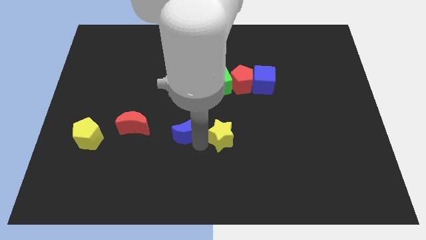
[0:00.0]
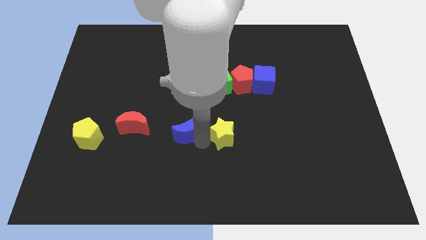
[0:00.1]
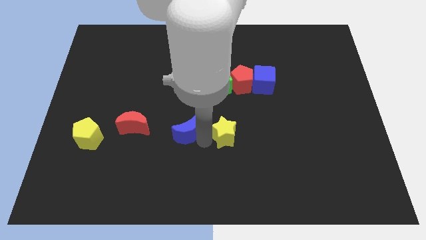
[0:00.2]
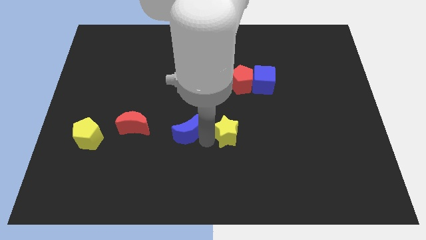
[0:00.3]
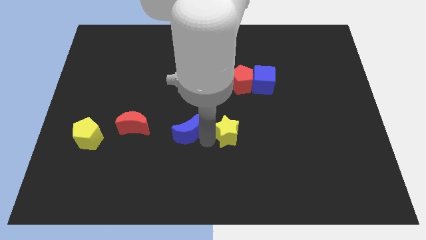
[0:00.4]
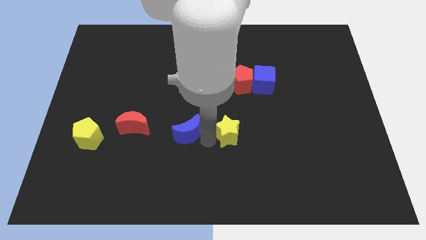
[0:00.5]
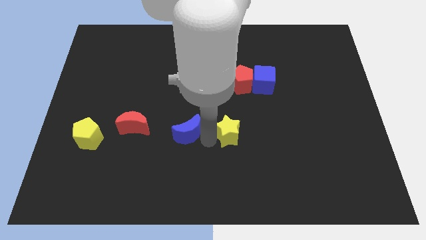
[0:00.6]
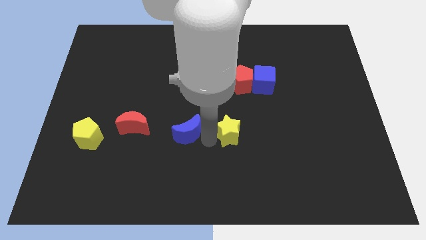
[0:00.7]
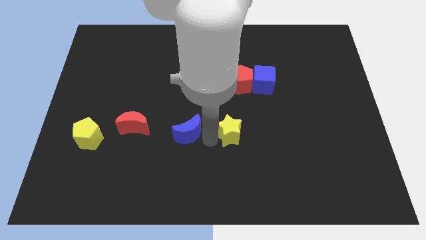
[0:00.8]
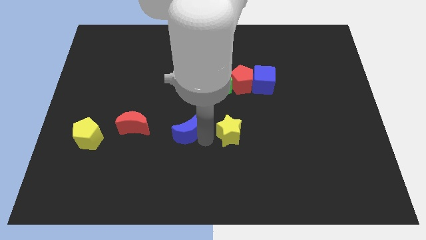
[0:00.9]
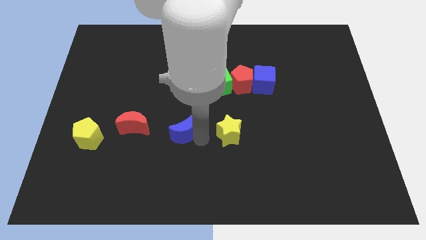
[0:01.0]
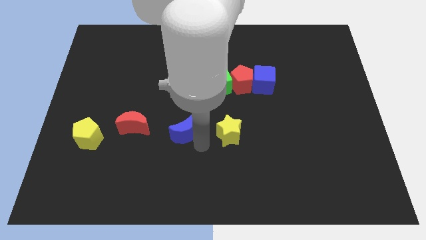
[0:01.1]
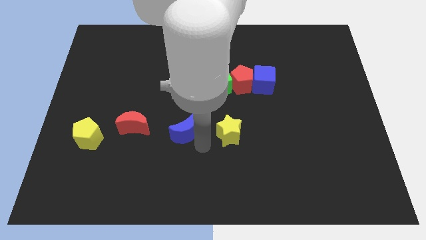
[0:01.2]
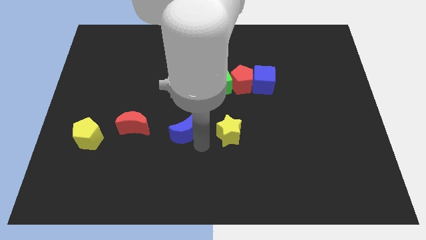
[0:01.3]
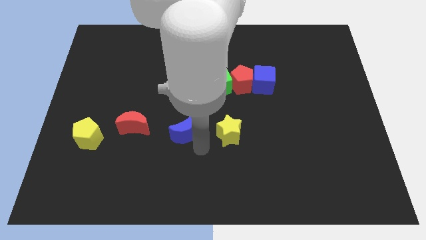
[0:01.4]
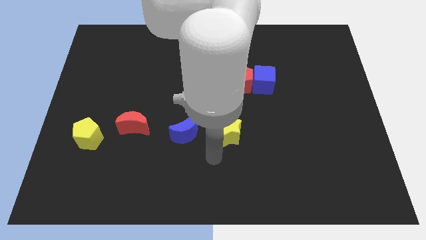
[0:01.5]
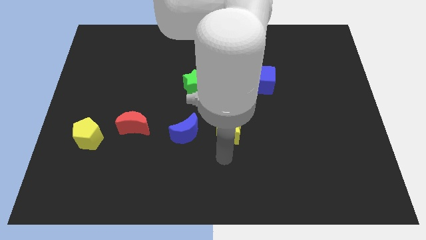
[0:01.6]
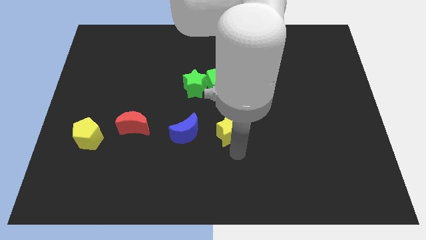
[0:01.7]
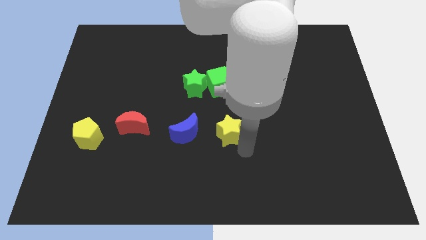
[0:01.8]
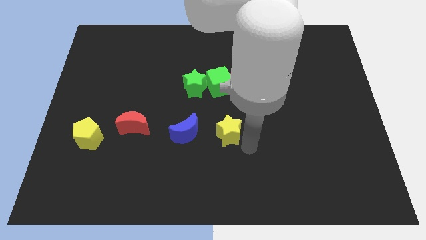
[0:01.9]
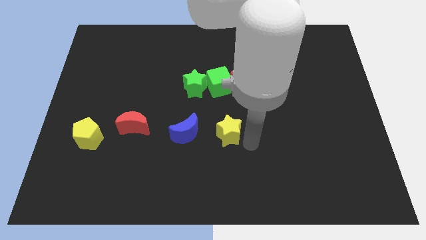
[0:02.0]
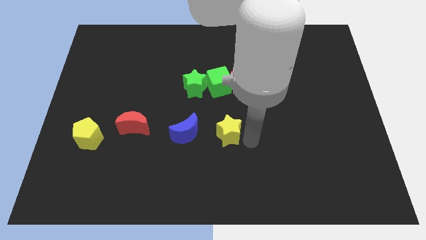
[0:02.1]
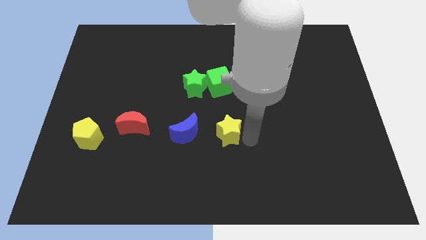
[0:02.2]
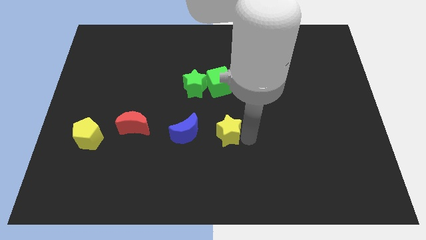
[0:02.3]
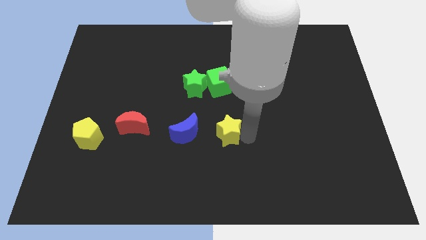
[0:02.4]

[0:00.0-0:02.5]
push yellow star into the blue crescent

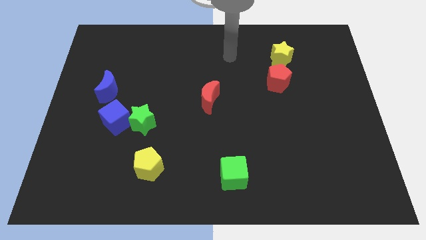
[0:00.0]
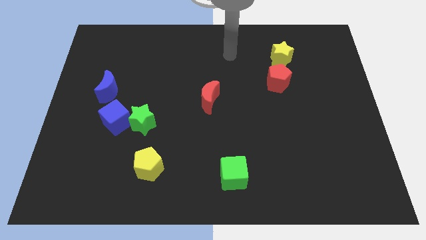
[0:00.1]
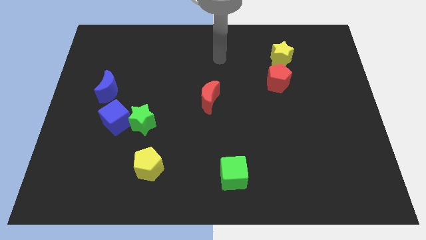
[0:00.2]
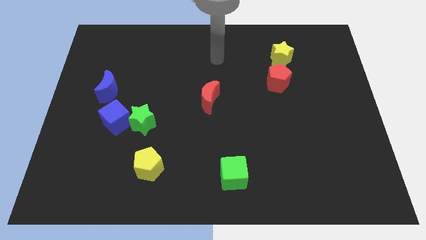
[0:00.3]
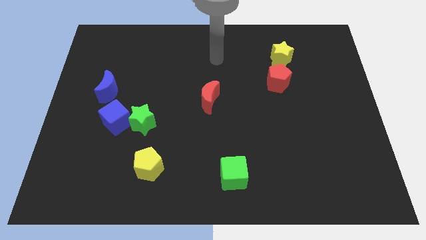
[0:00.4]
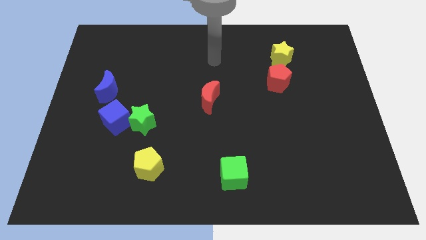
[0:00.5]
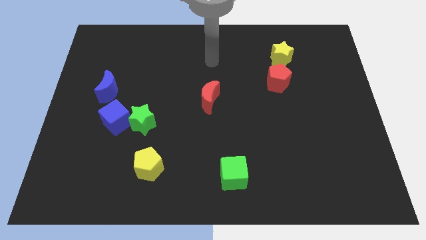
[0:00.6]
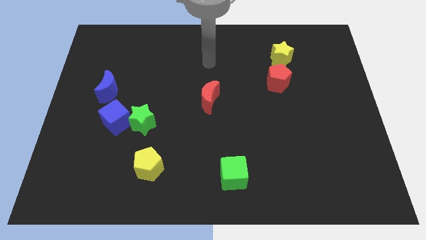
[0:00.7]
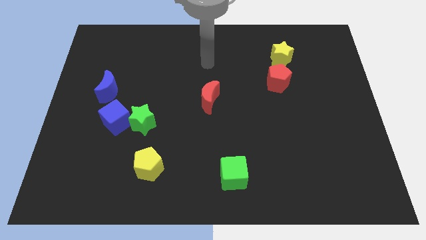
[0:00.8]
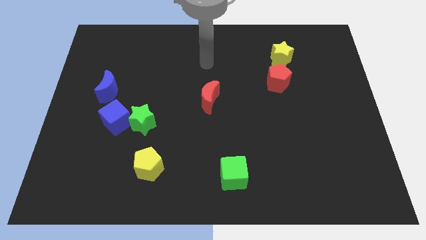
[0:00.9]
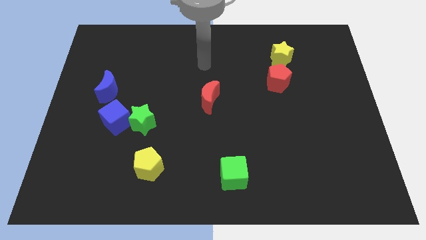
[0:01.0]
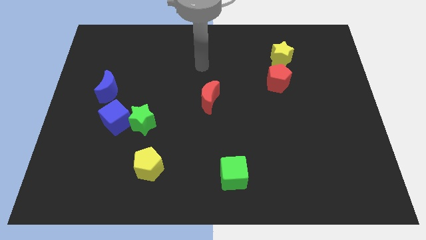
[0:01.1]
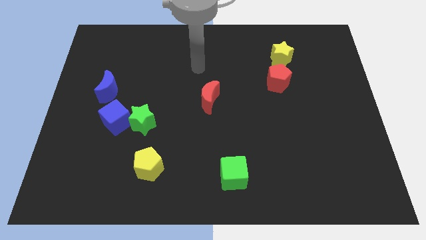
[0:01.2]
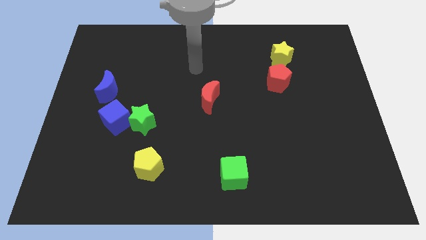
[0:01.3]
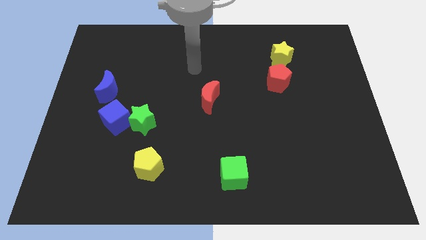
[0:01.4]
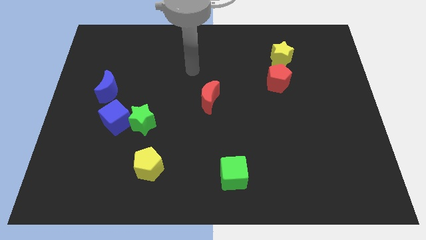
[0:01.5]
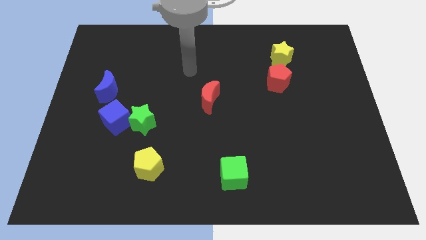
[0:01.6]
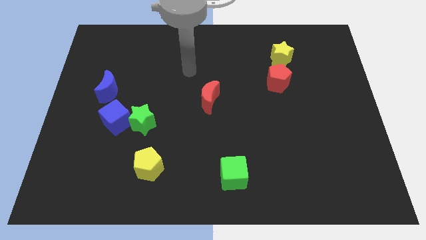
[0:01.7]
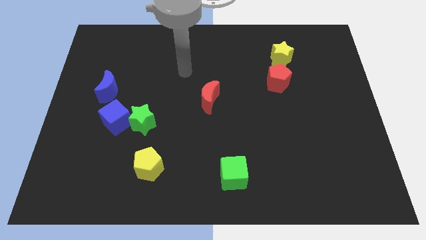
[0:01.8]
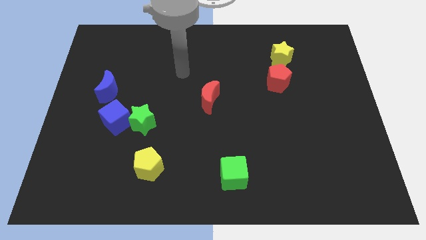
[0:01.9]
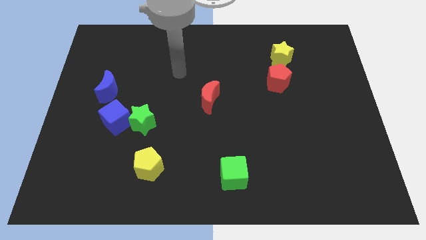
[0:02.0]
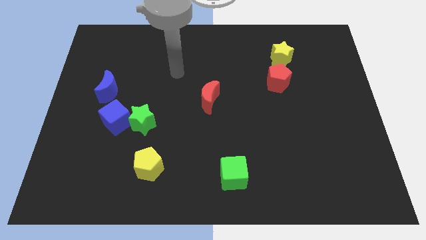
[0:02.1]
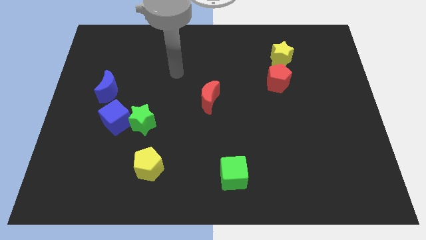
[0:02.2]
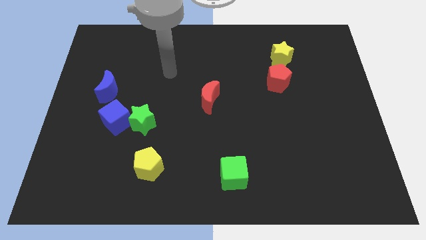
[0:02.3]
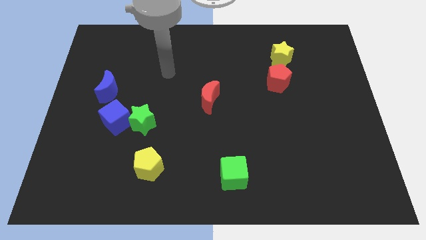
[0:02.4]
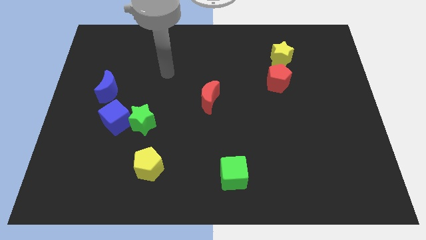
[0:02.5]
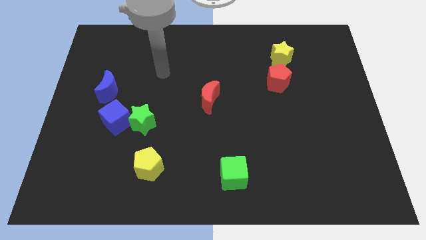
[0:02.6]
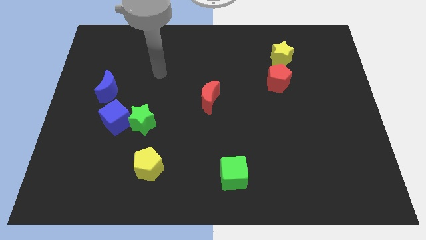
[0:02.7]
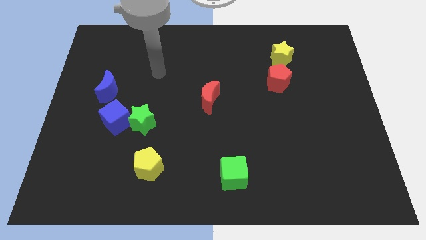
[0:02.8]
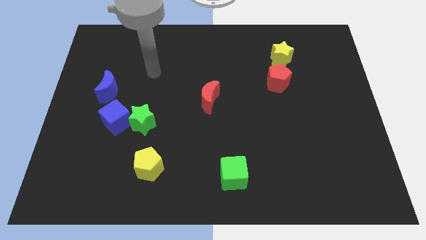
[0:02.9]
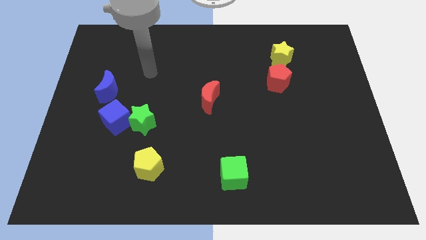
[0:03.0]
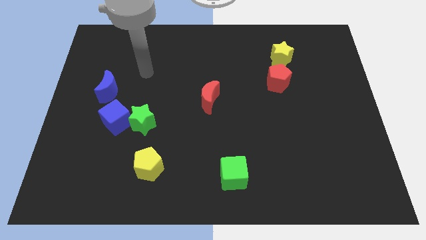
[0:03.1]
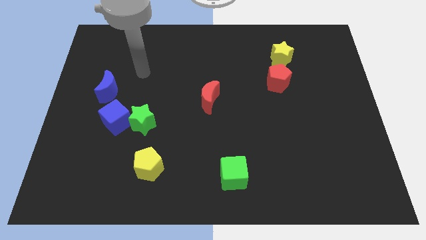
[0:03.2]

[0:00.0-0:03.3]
point your arm at the top side of the green star

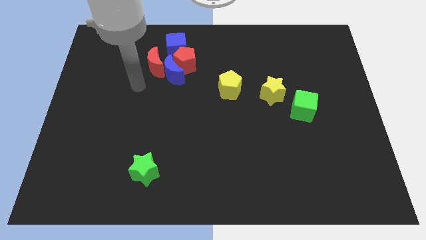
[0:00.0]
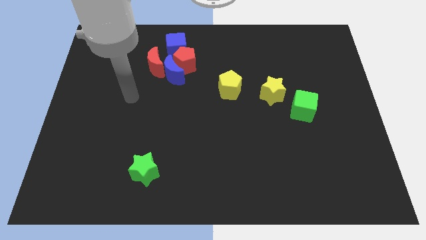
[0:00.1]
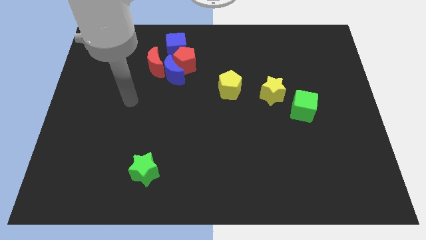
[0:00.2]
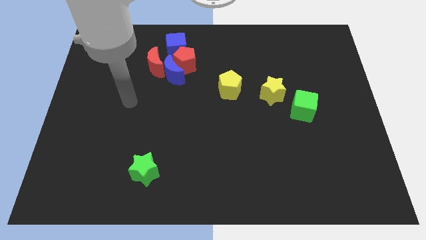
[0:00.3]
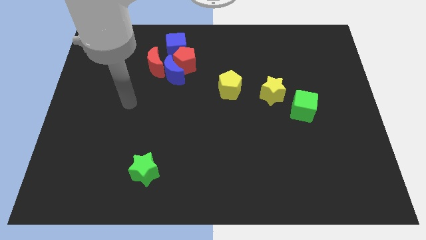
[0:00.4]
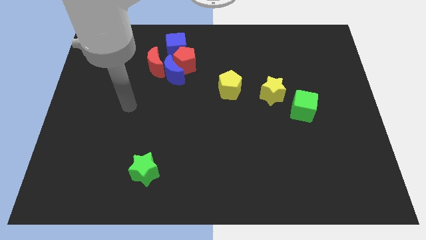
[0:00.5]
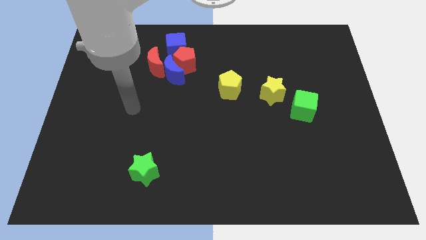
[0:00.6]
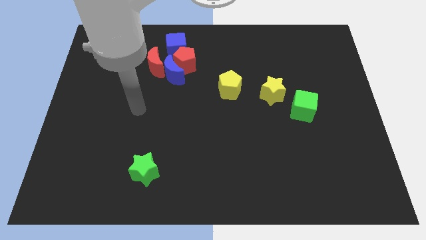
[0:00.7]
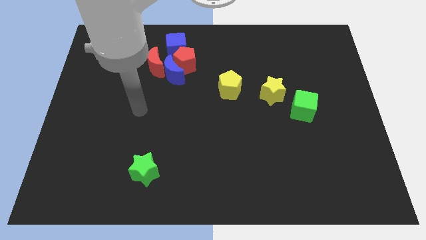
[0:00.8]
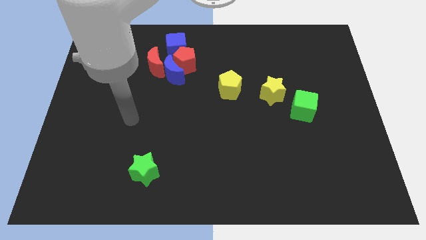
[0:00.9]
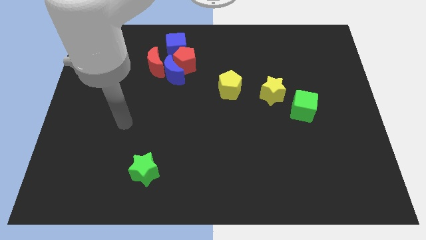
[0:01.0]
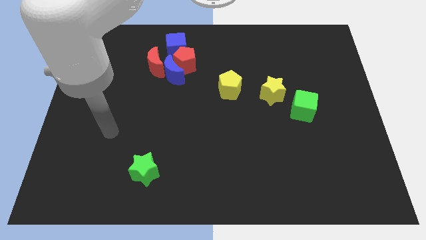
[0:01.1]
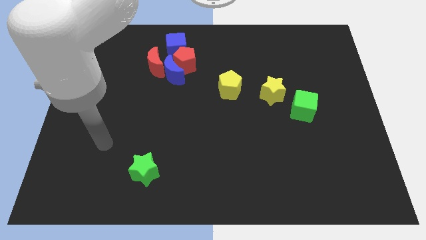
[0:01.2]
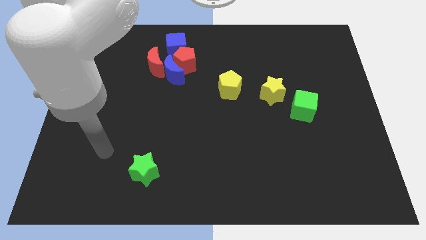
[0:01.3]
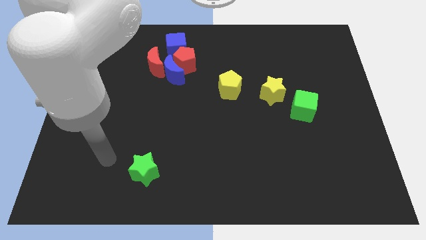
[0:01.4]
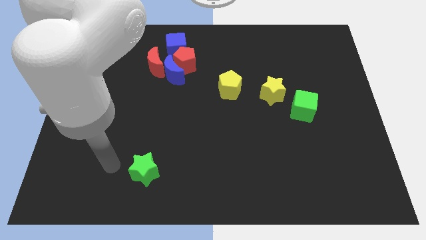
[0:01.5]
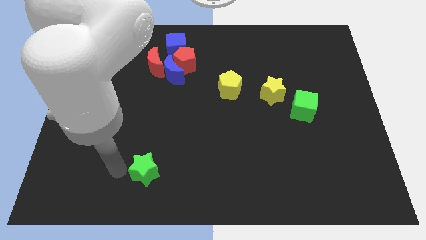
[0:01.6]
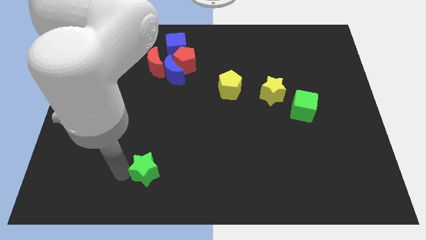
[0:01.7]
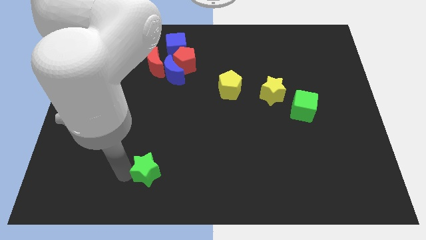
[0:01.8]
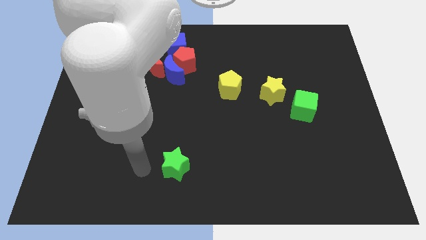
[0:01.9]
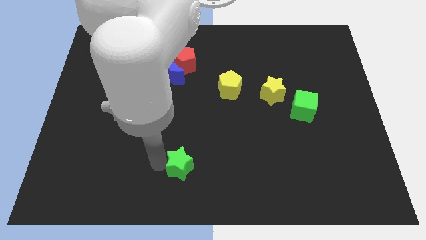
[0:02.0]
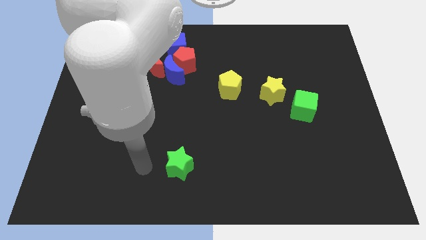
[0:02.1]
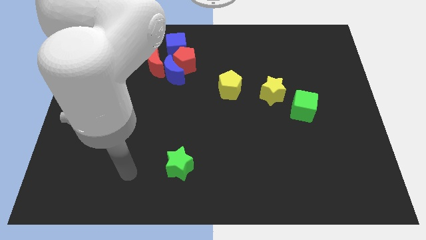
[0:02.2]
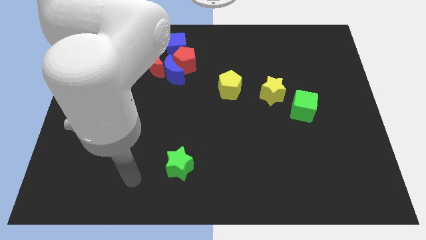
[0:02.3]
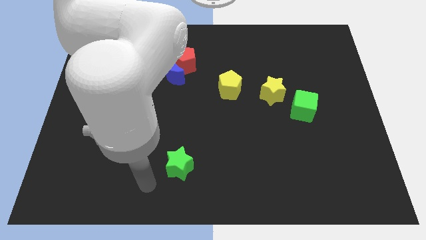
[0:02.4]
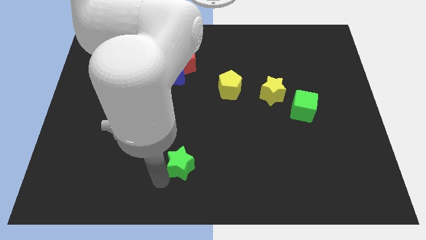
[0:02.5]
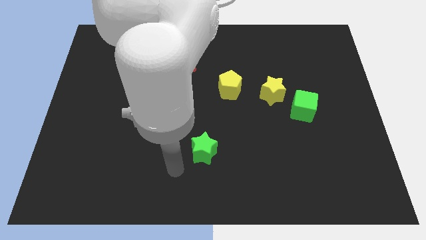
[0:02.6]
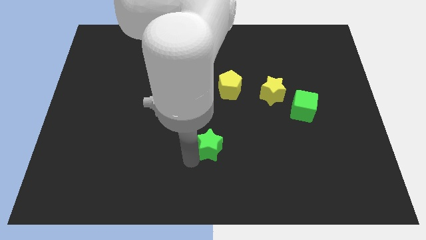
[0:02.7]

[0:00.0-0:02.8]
move the green star to the top of the board

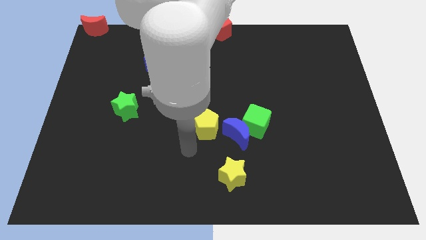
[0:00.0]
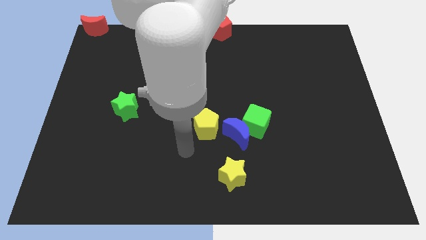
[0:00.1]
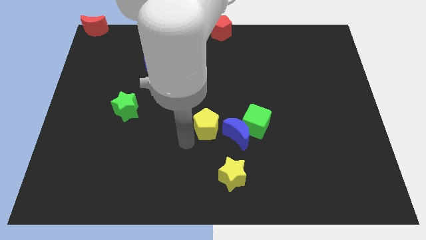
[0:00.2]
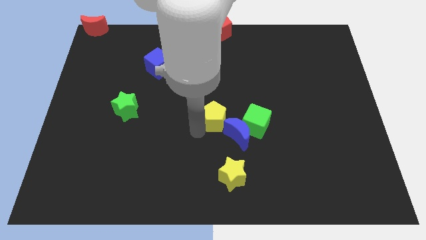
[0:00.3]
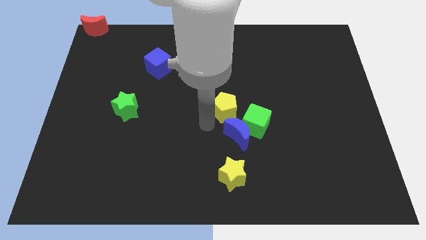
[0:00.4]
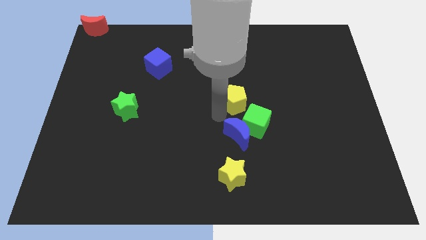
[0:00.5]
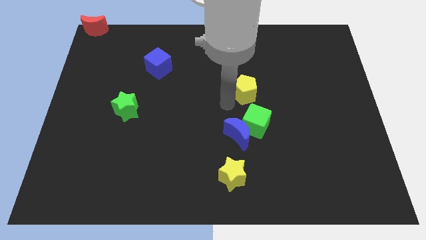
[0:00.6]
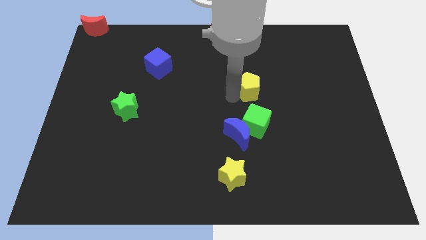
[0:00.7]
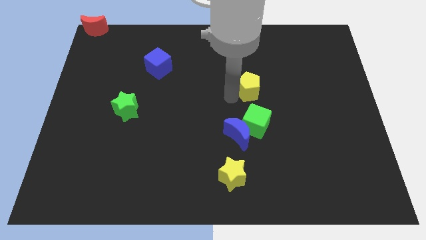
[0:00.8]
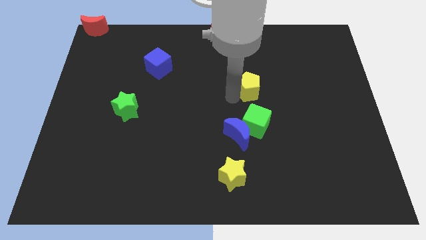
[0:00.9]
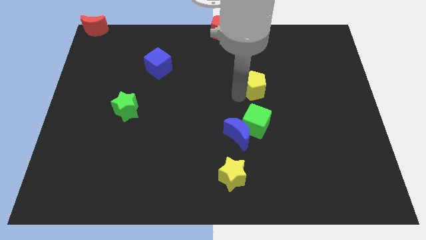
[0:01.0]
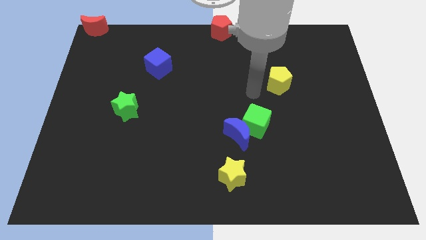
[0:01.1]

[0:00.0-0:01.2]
move the yellow pentagon above the green cube
